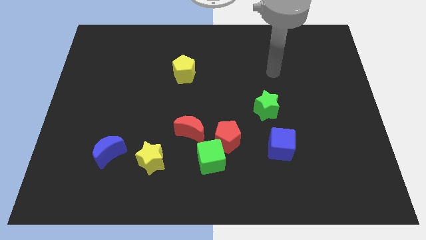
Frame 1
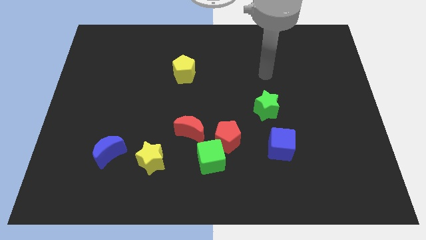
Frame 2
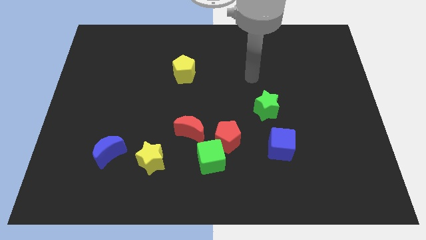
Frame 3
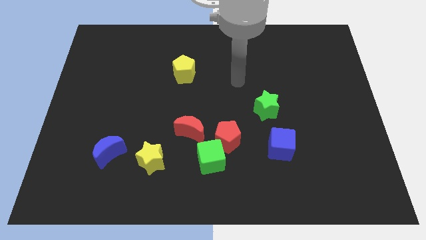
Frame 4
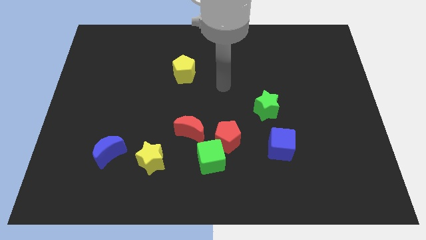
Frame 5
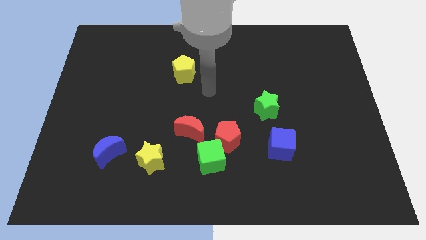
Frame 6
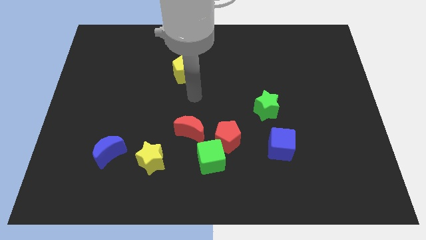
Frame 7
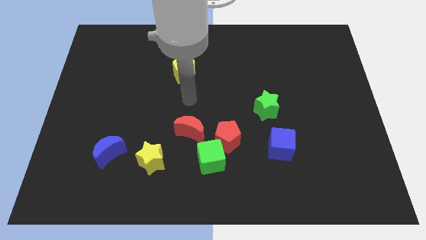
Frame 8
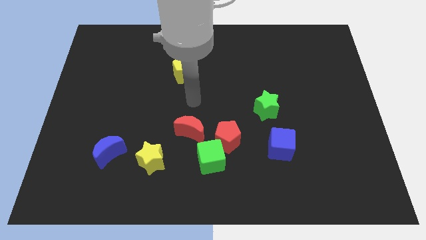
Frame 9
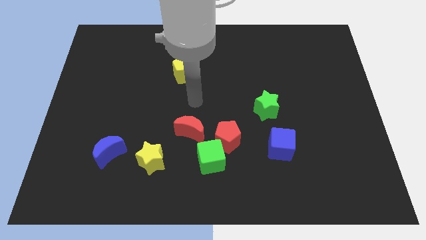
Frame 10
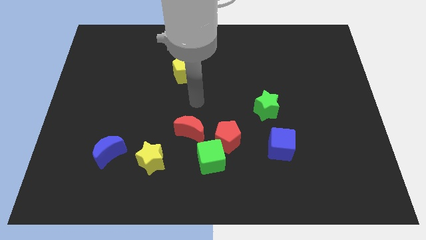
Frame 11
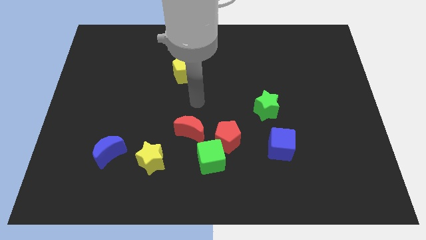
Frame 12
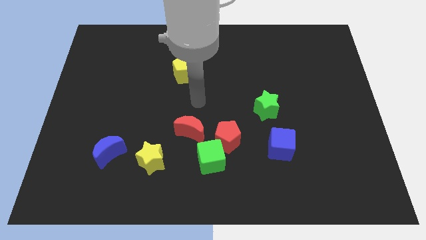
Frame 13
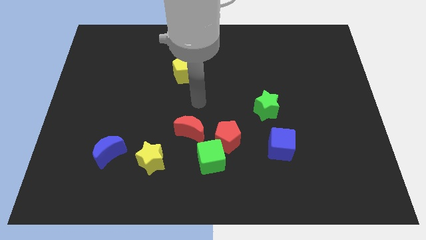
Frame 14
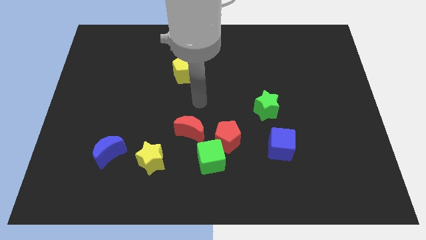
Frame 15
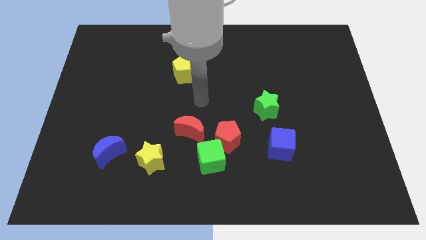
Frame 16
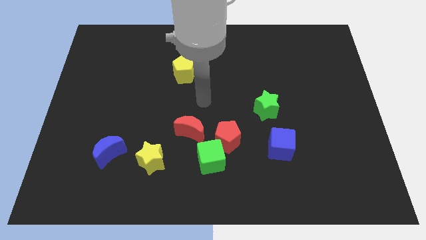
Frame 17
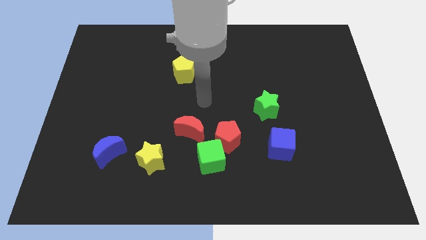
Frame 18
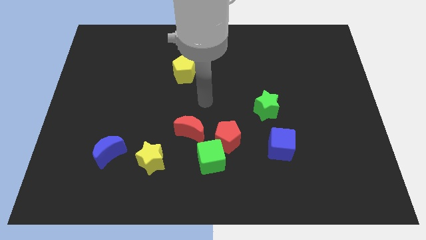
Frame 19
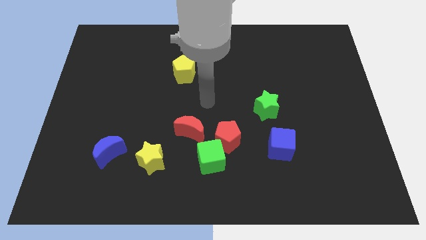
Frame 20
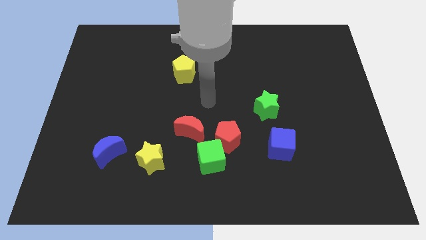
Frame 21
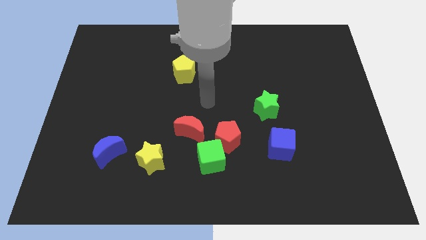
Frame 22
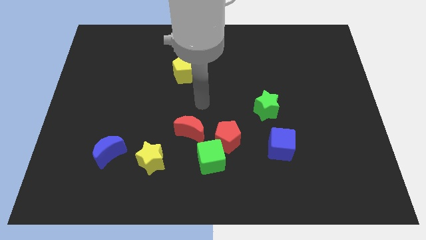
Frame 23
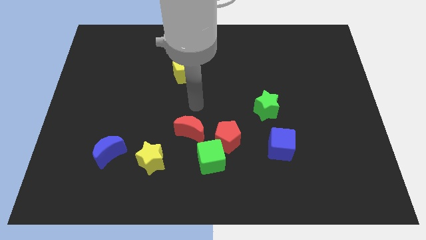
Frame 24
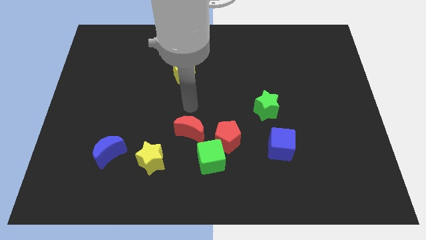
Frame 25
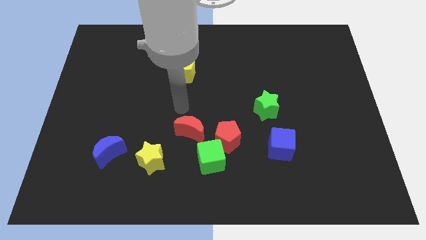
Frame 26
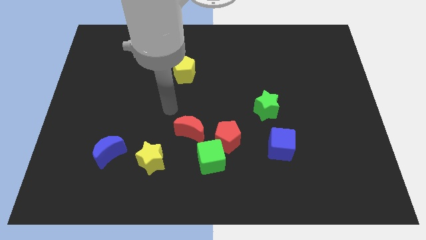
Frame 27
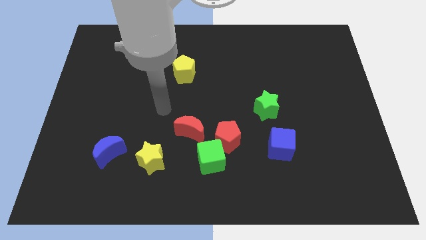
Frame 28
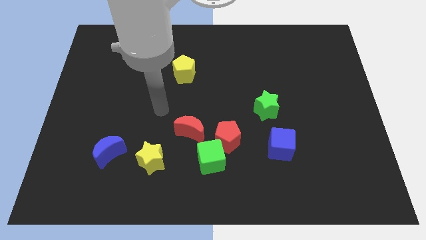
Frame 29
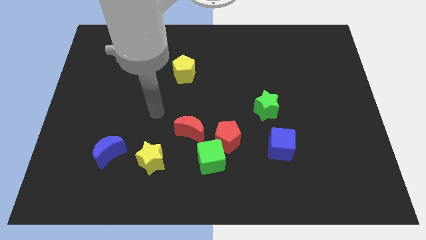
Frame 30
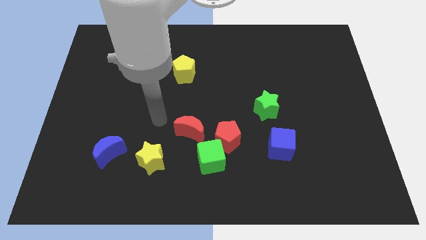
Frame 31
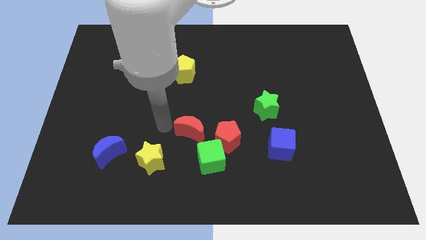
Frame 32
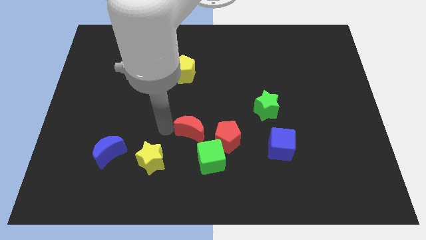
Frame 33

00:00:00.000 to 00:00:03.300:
place the arm to the left of the red moon

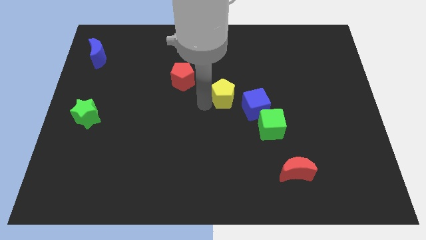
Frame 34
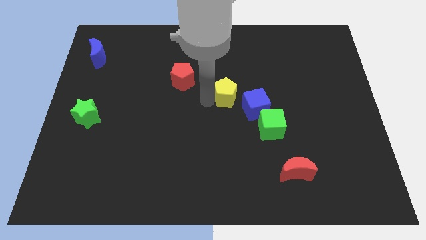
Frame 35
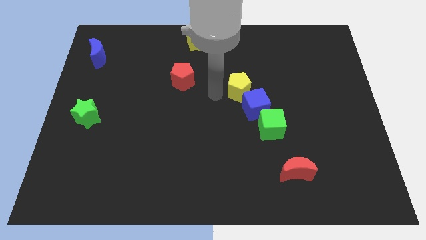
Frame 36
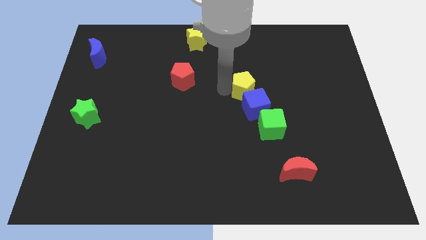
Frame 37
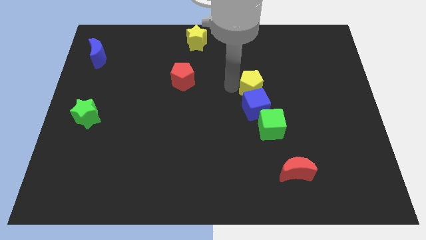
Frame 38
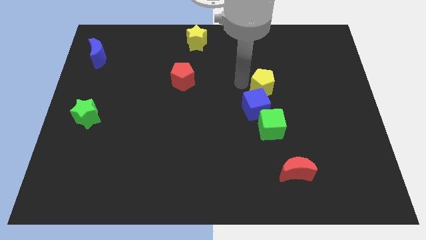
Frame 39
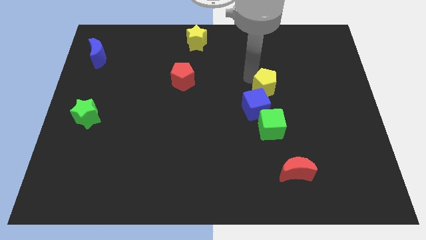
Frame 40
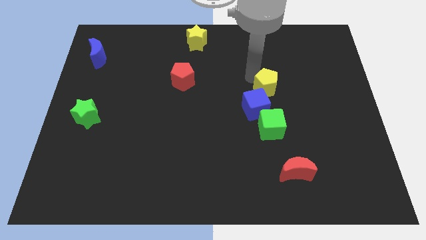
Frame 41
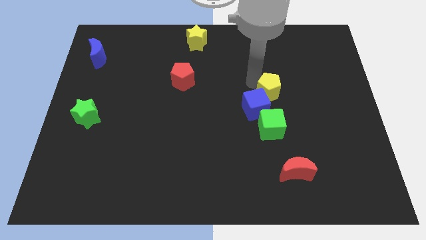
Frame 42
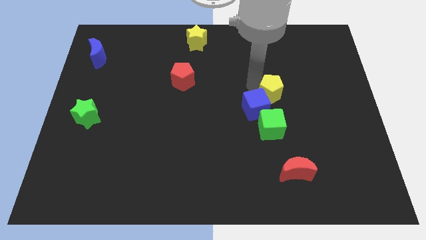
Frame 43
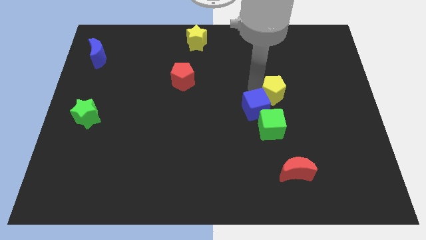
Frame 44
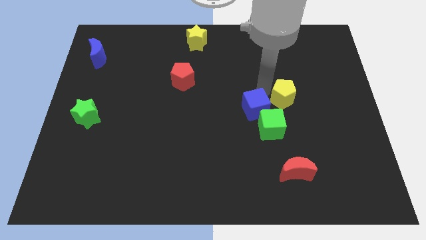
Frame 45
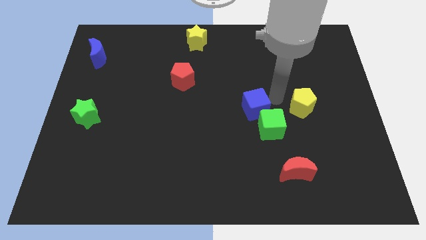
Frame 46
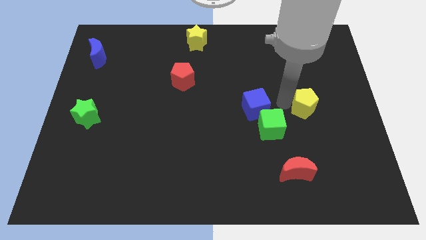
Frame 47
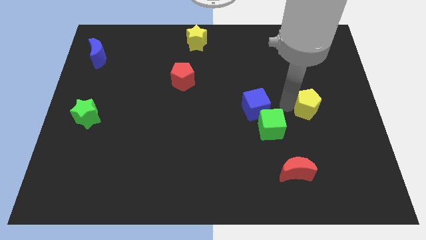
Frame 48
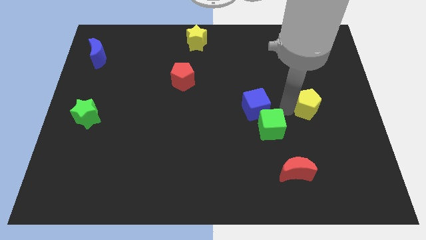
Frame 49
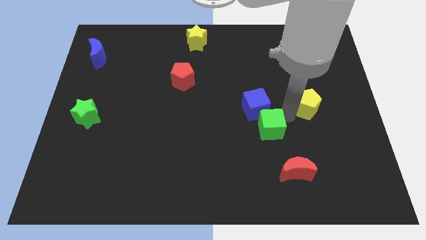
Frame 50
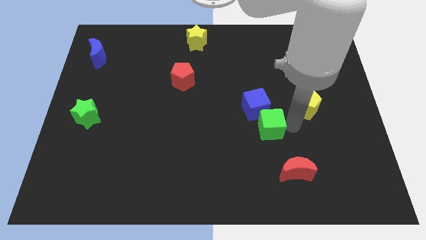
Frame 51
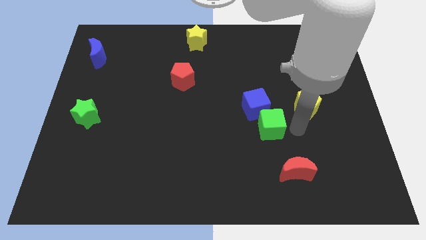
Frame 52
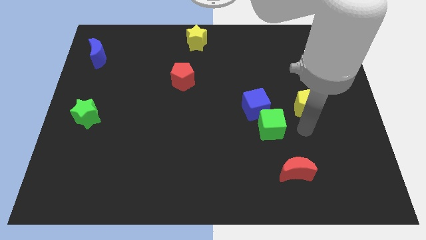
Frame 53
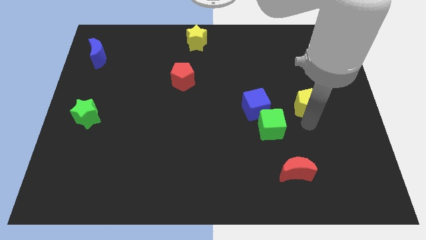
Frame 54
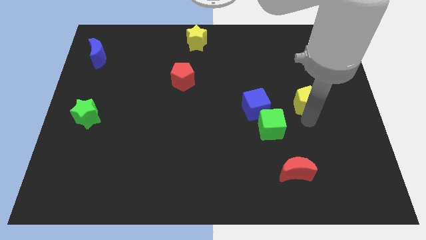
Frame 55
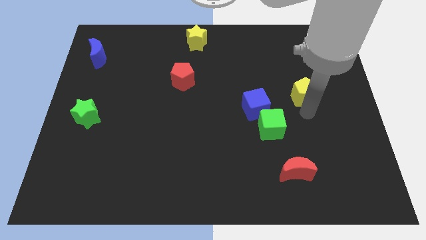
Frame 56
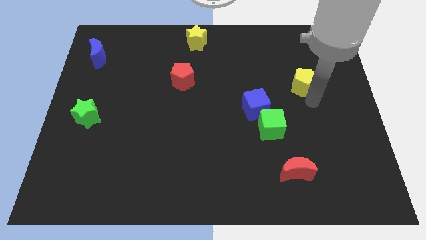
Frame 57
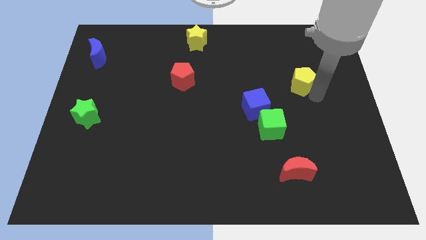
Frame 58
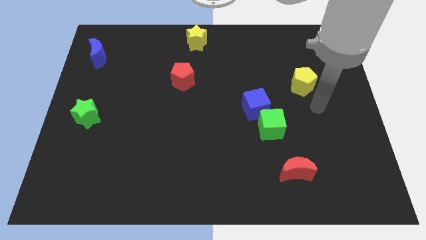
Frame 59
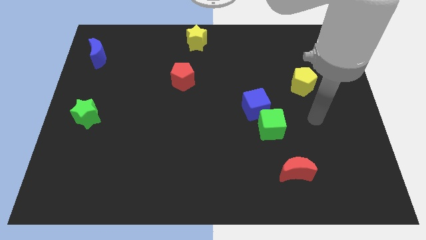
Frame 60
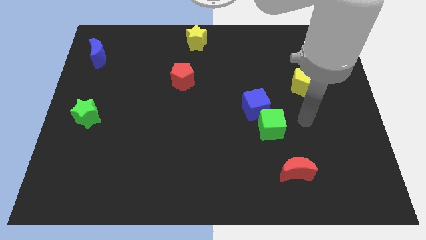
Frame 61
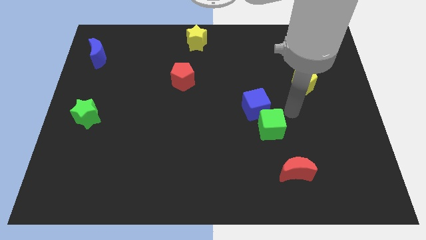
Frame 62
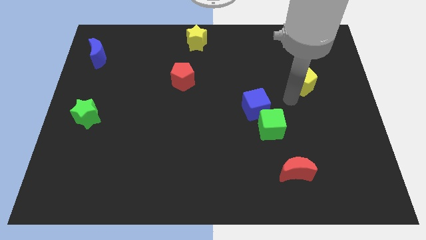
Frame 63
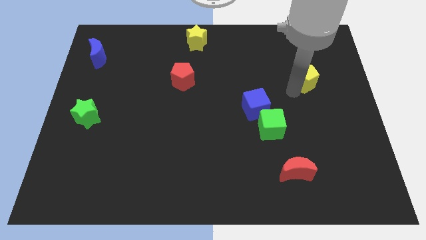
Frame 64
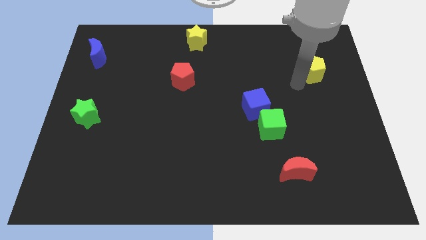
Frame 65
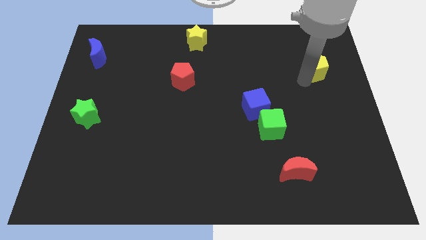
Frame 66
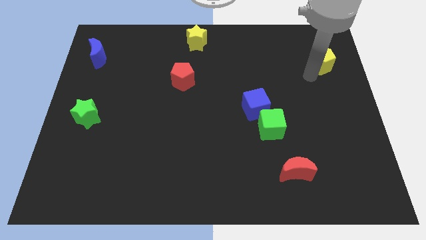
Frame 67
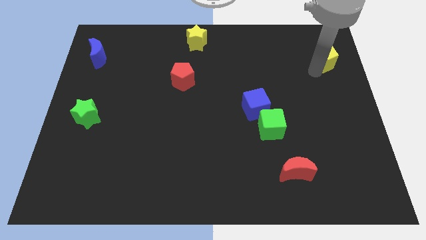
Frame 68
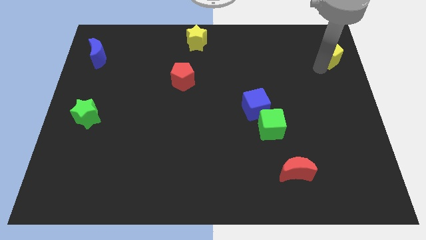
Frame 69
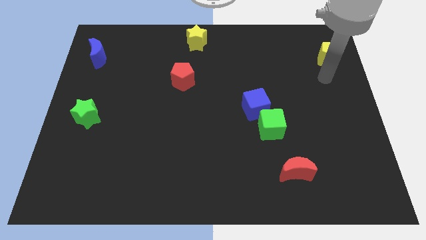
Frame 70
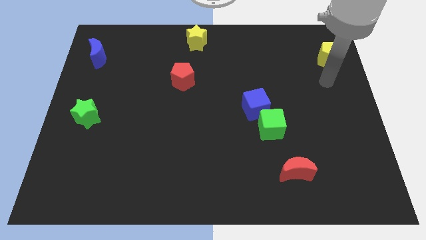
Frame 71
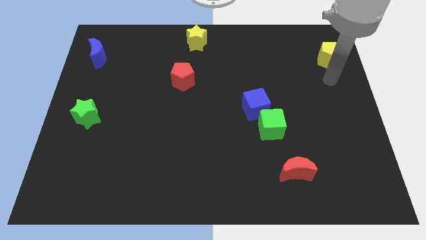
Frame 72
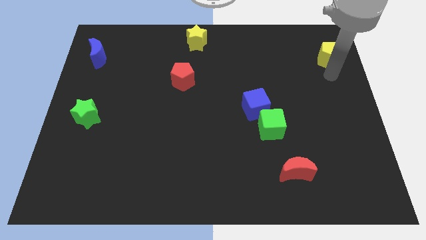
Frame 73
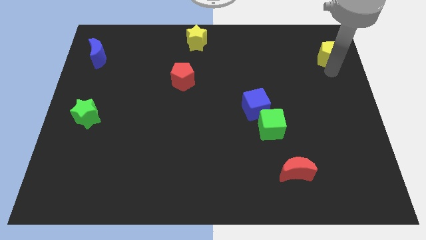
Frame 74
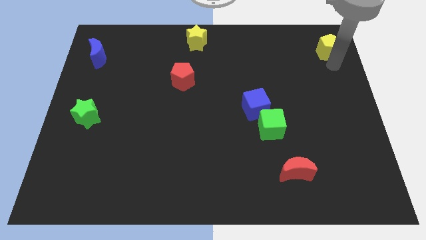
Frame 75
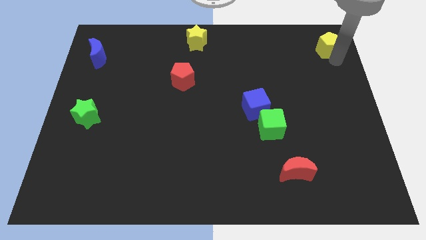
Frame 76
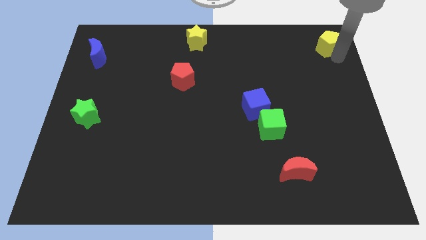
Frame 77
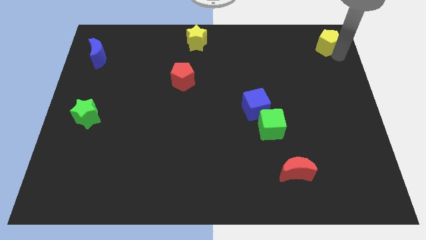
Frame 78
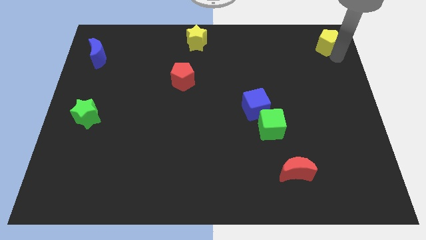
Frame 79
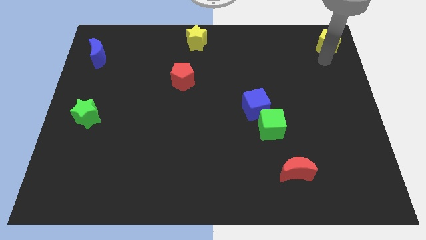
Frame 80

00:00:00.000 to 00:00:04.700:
place the yellow pentagon at the top right corner

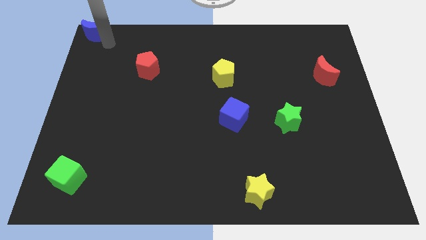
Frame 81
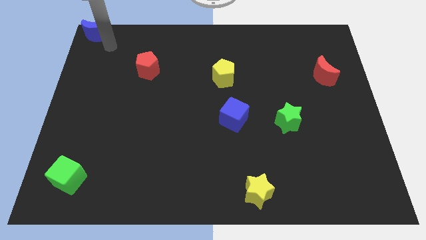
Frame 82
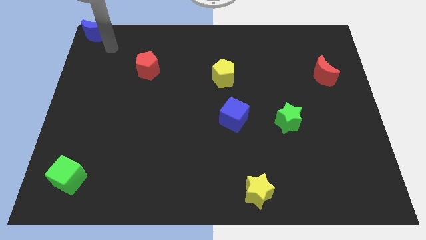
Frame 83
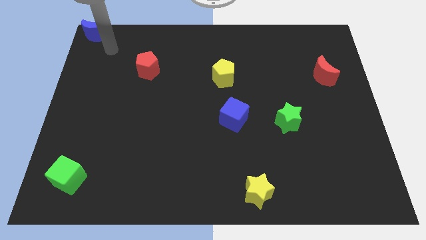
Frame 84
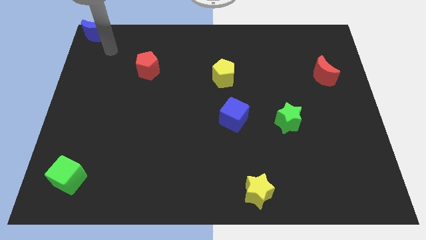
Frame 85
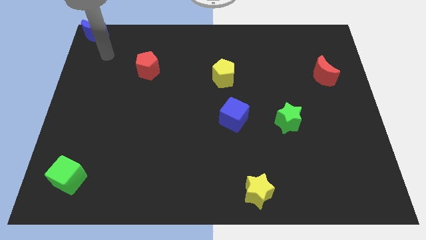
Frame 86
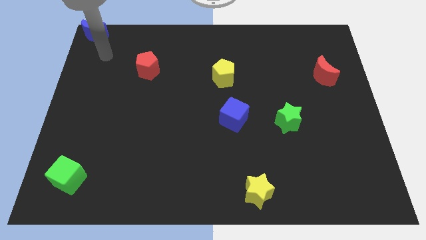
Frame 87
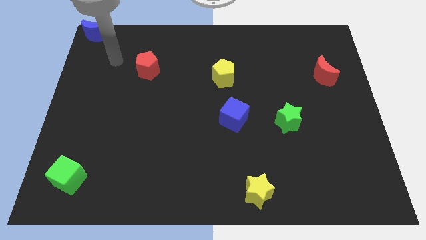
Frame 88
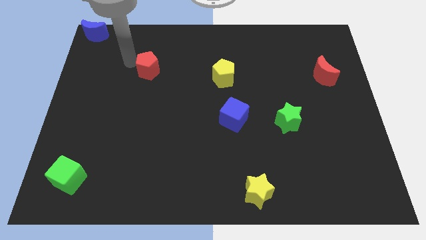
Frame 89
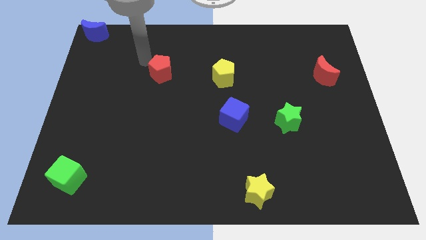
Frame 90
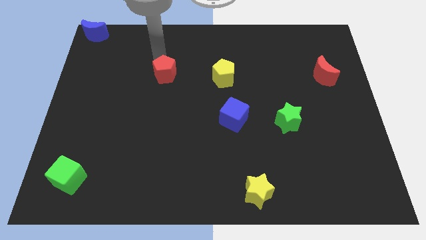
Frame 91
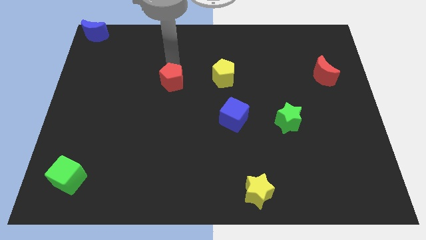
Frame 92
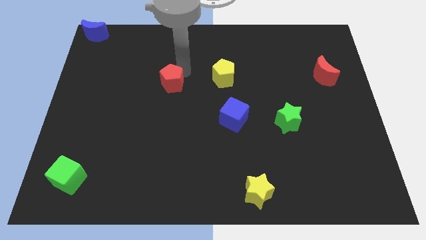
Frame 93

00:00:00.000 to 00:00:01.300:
move the red pentagon slightly downwards
